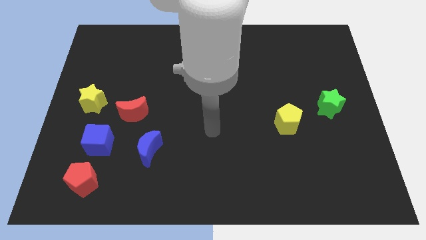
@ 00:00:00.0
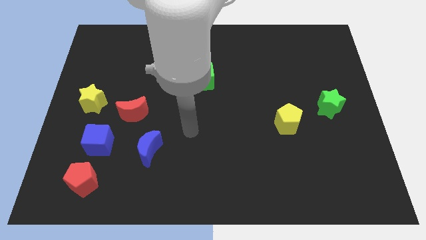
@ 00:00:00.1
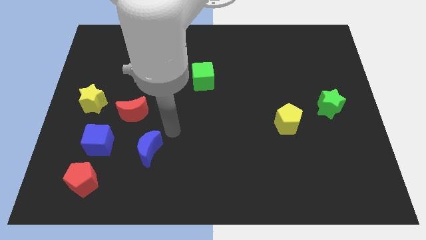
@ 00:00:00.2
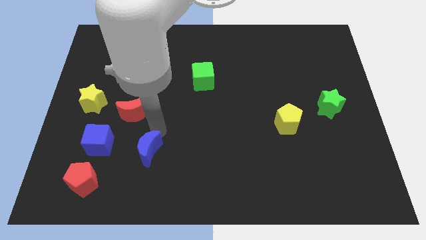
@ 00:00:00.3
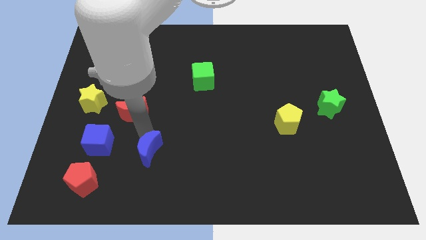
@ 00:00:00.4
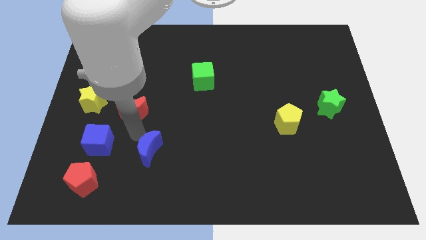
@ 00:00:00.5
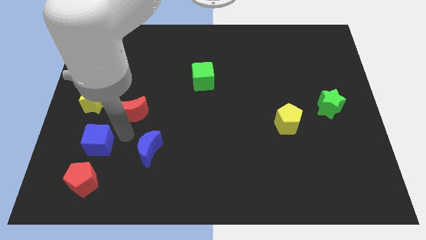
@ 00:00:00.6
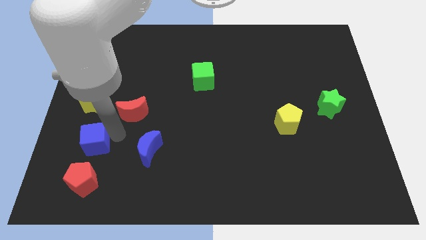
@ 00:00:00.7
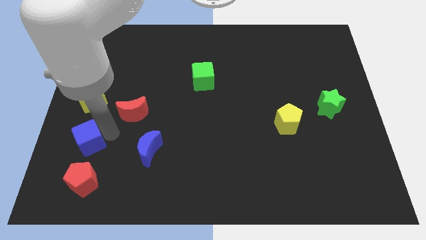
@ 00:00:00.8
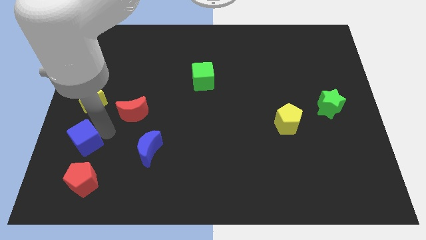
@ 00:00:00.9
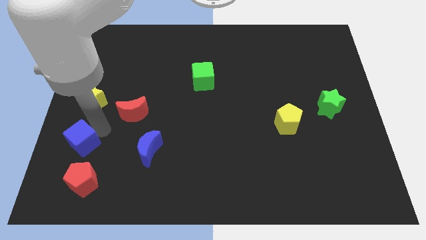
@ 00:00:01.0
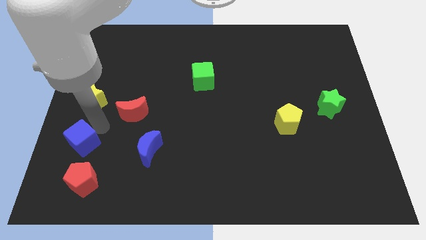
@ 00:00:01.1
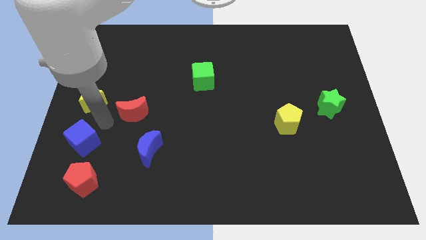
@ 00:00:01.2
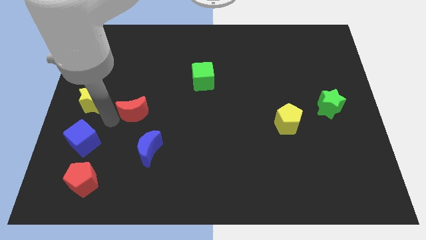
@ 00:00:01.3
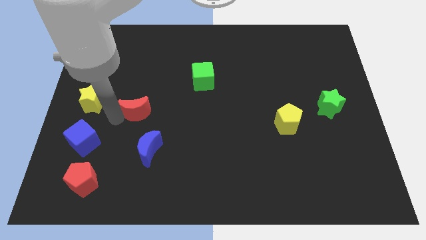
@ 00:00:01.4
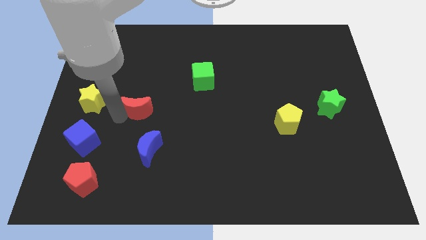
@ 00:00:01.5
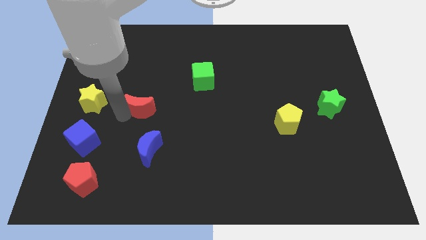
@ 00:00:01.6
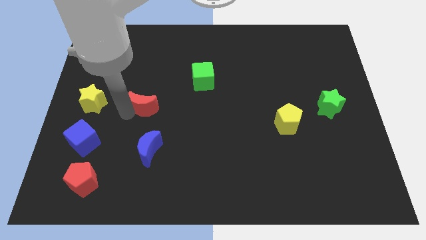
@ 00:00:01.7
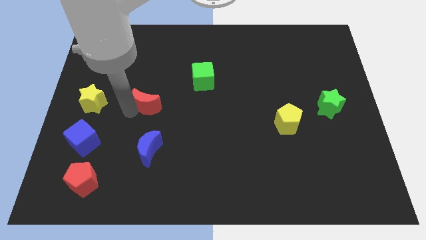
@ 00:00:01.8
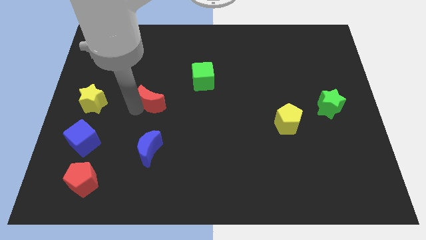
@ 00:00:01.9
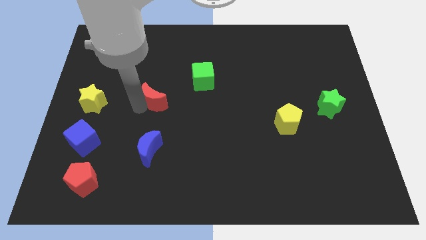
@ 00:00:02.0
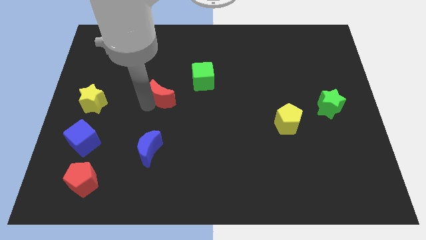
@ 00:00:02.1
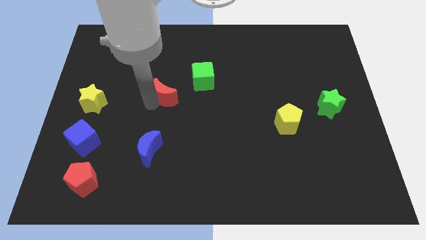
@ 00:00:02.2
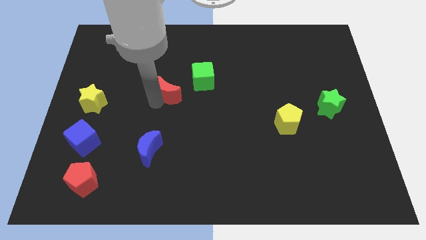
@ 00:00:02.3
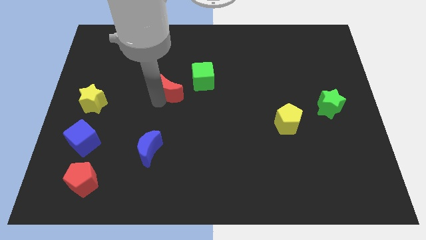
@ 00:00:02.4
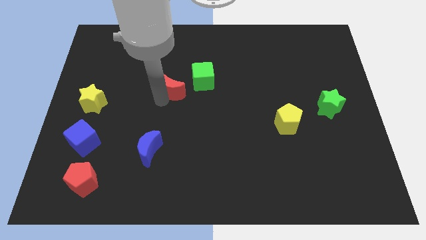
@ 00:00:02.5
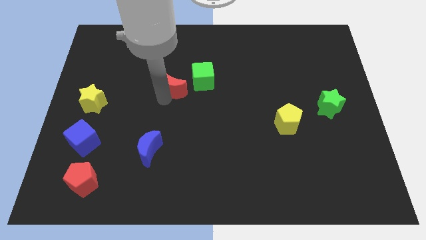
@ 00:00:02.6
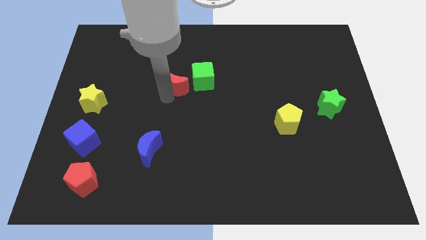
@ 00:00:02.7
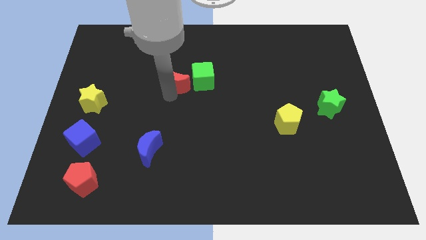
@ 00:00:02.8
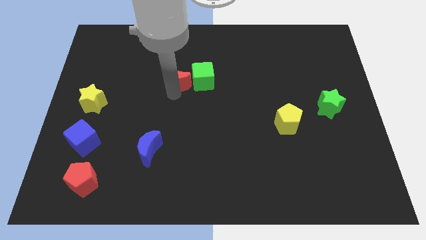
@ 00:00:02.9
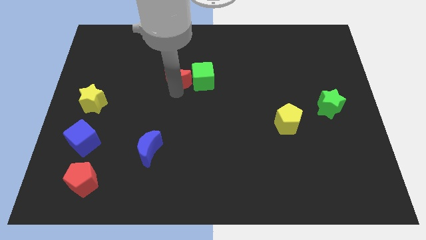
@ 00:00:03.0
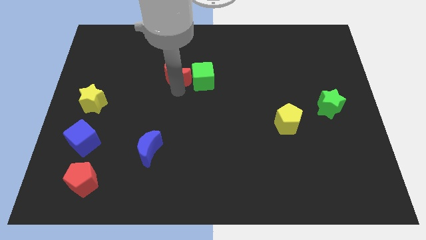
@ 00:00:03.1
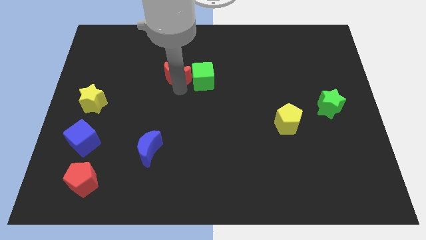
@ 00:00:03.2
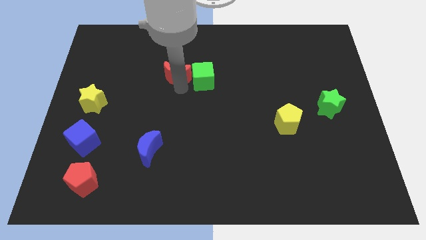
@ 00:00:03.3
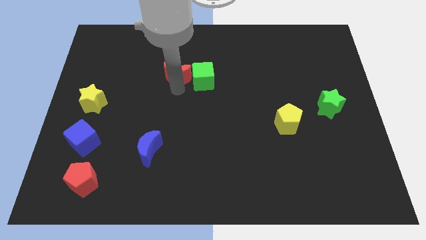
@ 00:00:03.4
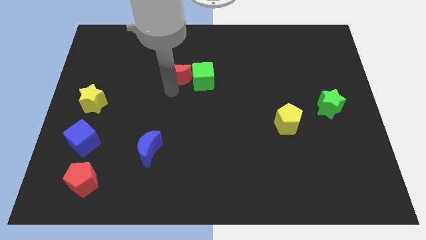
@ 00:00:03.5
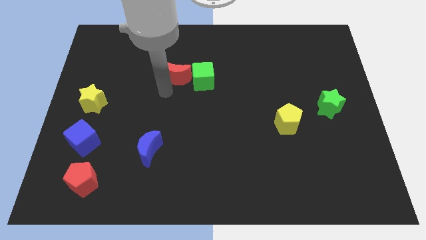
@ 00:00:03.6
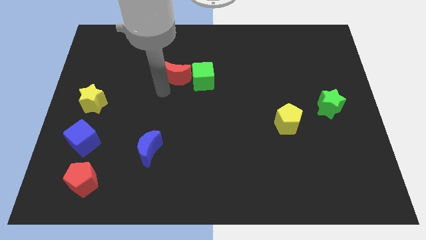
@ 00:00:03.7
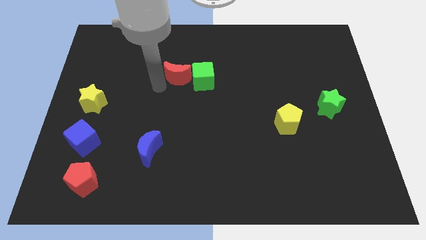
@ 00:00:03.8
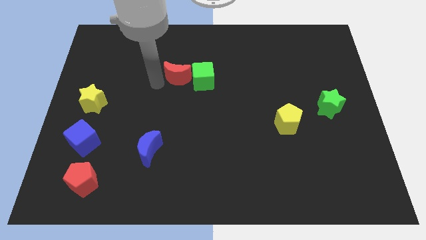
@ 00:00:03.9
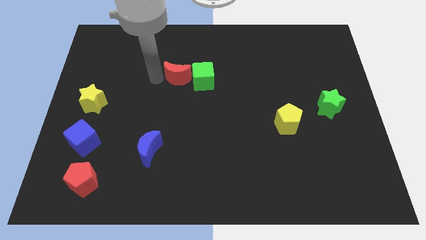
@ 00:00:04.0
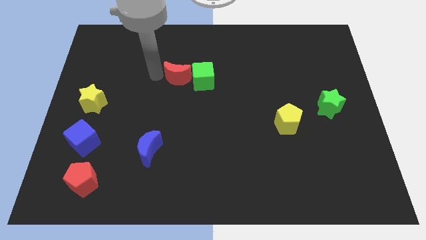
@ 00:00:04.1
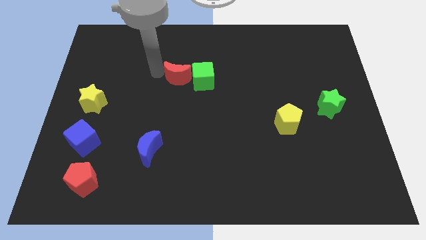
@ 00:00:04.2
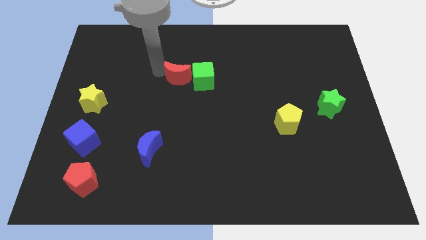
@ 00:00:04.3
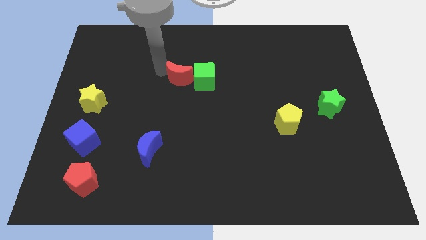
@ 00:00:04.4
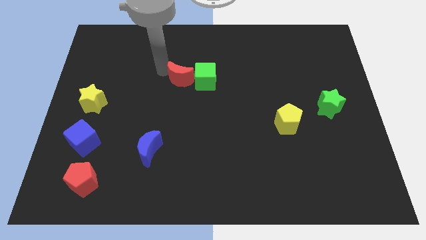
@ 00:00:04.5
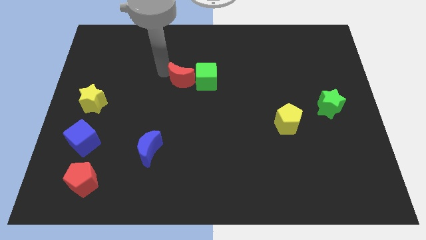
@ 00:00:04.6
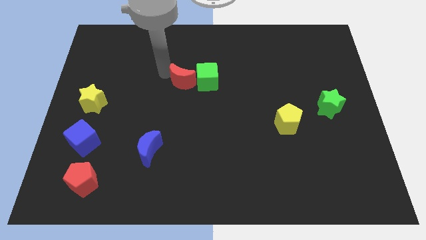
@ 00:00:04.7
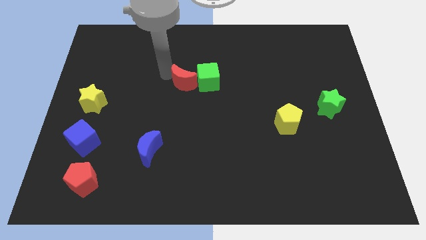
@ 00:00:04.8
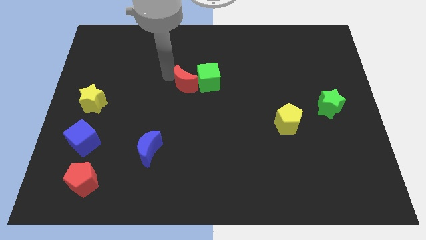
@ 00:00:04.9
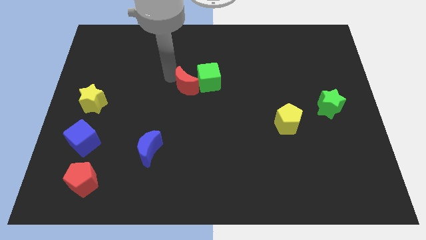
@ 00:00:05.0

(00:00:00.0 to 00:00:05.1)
slide the red moon to the green cube

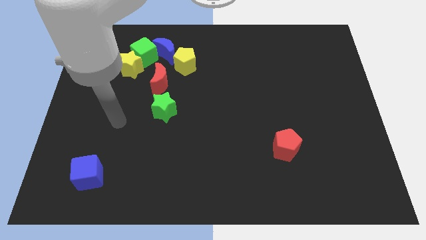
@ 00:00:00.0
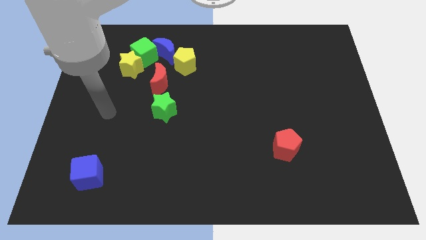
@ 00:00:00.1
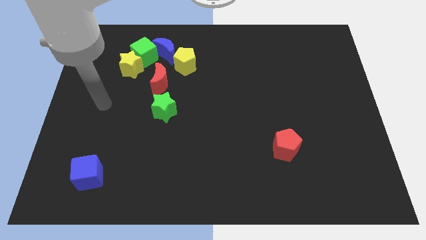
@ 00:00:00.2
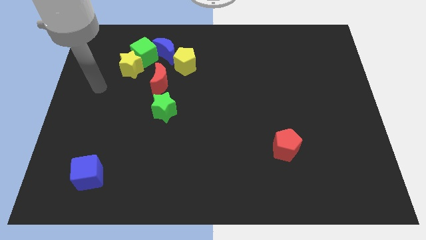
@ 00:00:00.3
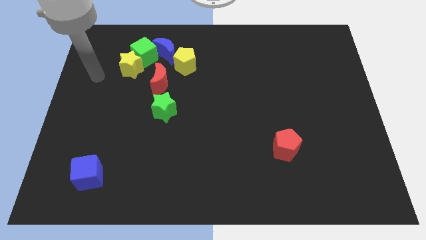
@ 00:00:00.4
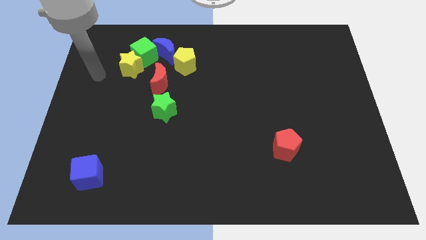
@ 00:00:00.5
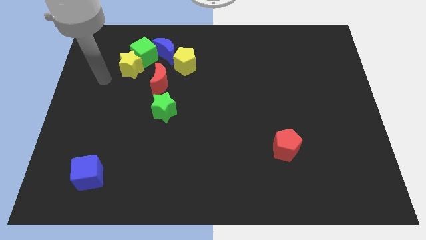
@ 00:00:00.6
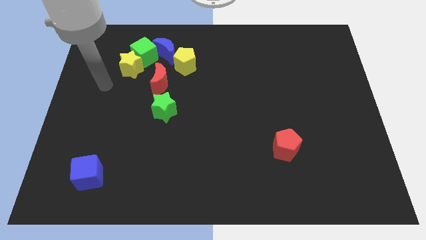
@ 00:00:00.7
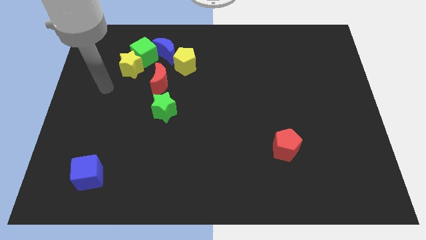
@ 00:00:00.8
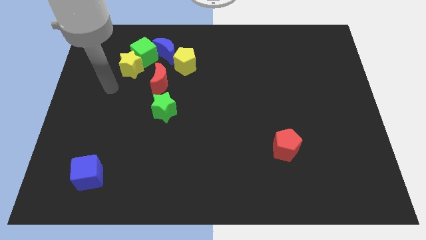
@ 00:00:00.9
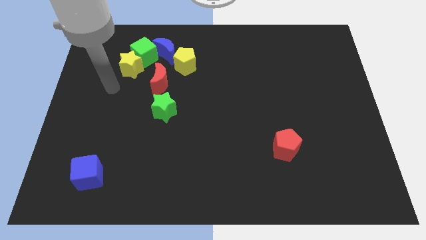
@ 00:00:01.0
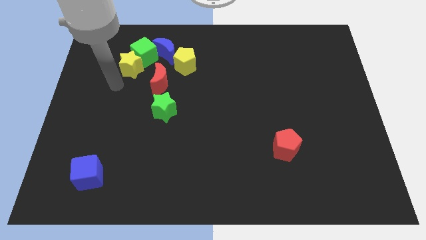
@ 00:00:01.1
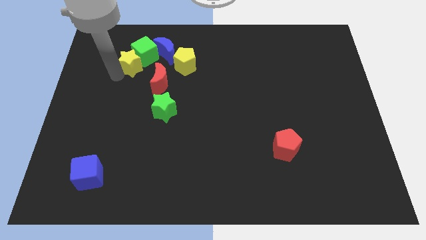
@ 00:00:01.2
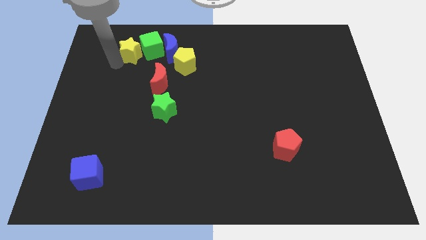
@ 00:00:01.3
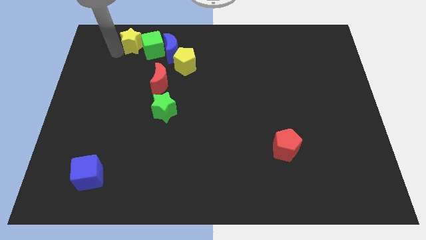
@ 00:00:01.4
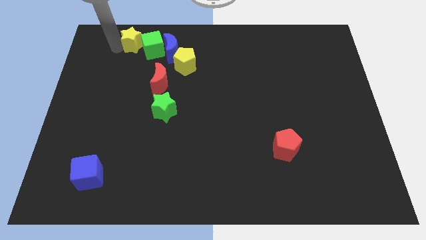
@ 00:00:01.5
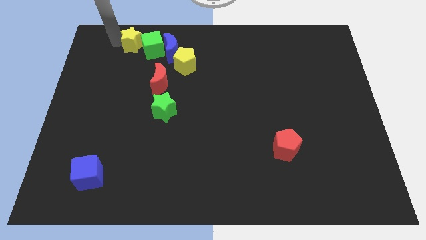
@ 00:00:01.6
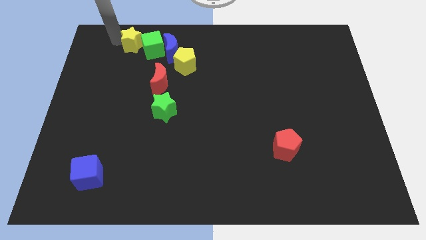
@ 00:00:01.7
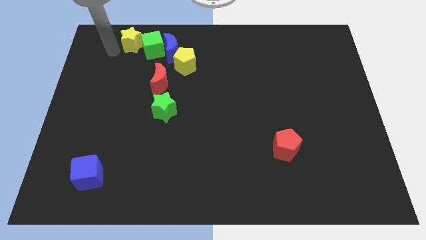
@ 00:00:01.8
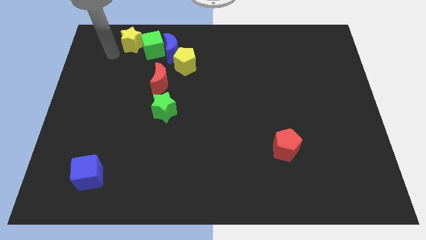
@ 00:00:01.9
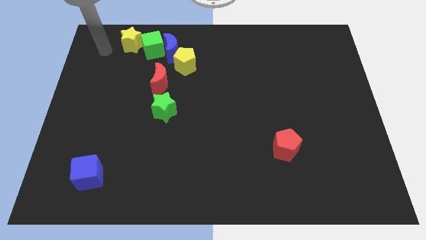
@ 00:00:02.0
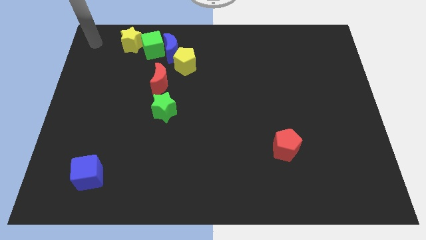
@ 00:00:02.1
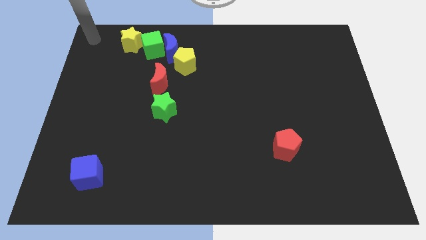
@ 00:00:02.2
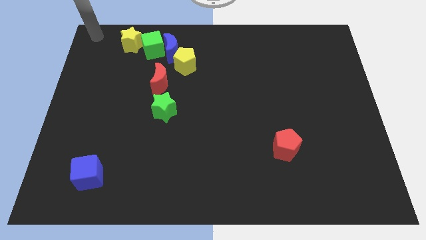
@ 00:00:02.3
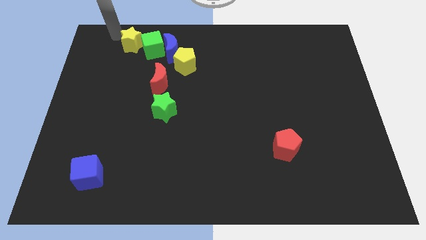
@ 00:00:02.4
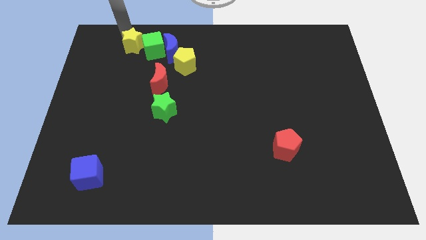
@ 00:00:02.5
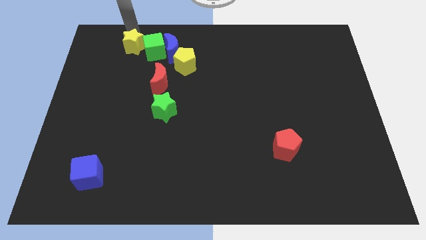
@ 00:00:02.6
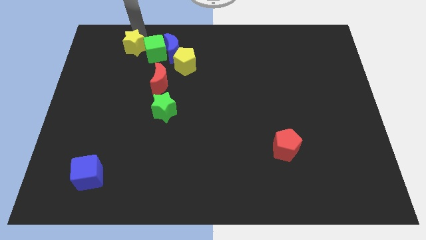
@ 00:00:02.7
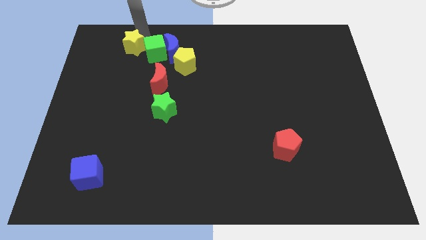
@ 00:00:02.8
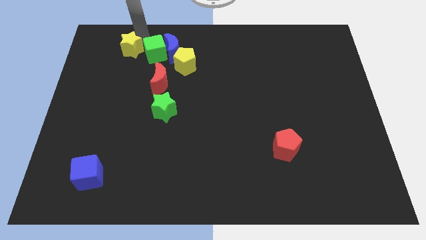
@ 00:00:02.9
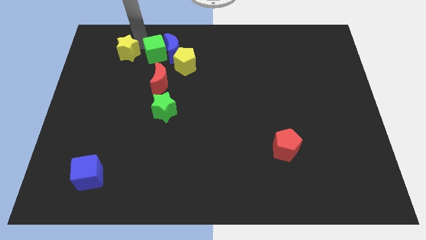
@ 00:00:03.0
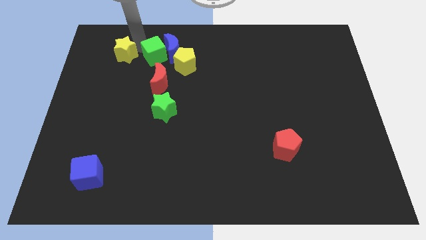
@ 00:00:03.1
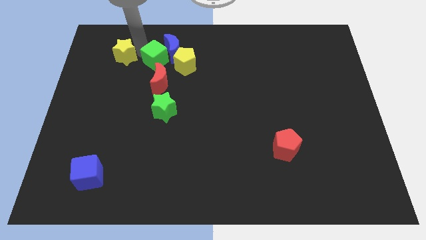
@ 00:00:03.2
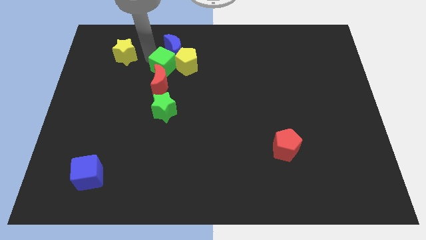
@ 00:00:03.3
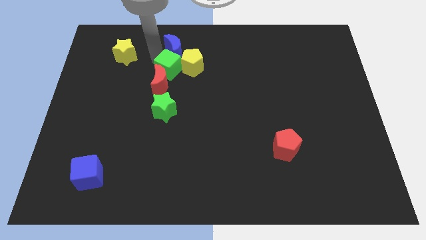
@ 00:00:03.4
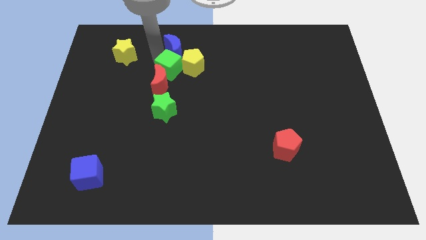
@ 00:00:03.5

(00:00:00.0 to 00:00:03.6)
put the green cube to the yellow pentagon
